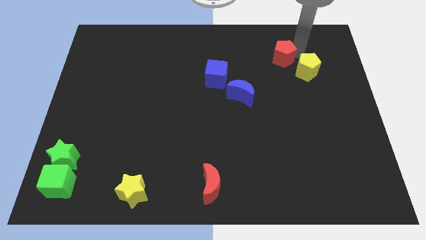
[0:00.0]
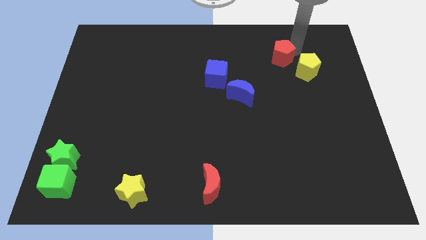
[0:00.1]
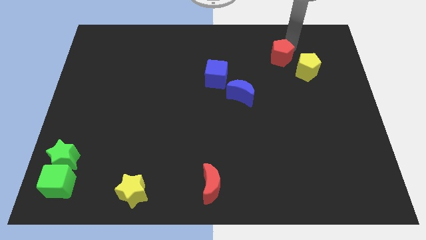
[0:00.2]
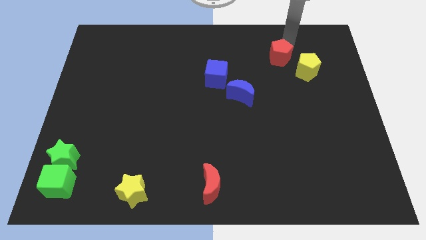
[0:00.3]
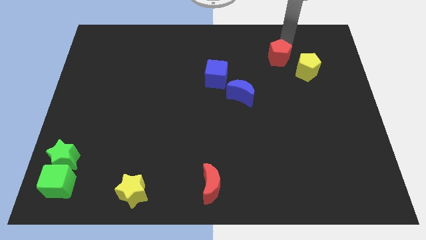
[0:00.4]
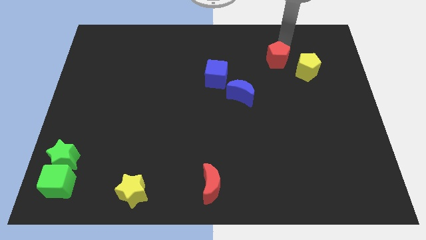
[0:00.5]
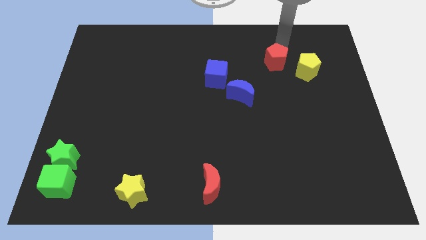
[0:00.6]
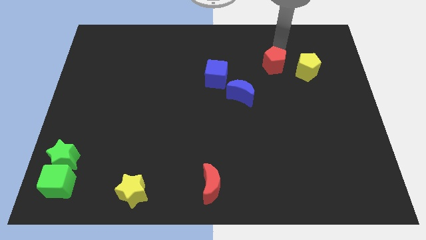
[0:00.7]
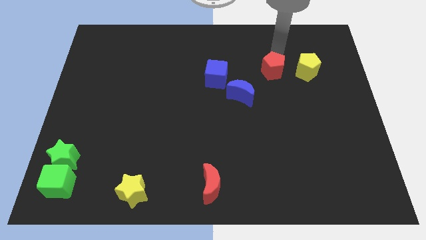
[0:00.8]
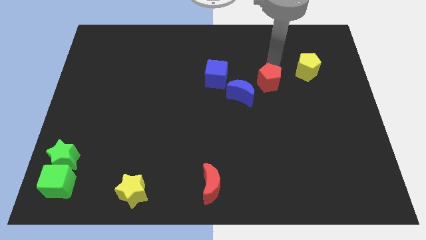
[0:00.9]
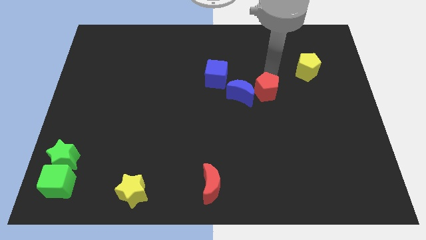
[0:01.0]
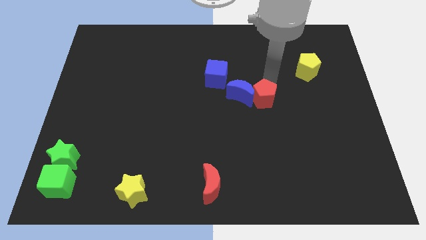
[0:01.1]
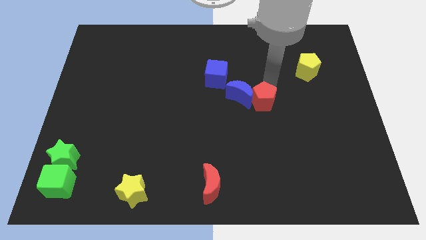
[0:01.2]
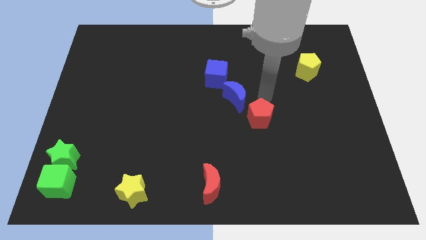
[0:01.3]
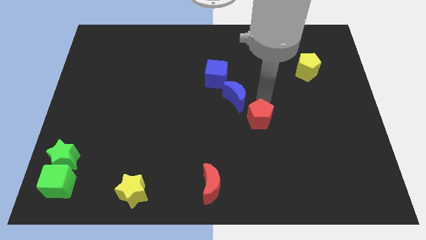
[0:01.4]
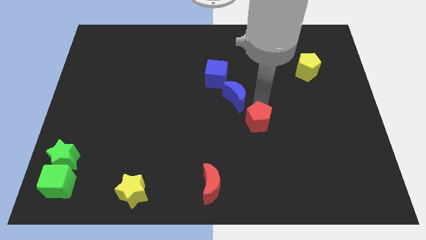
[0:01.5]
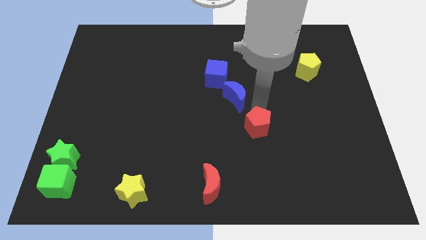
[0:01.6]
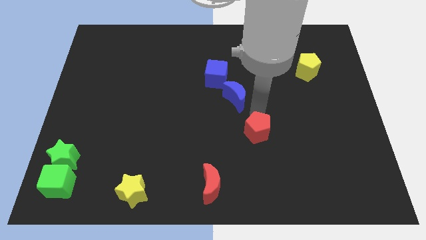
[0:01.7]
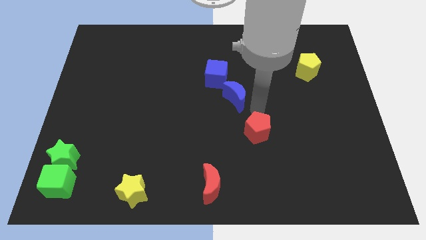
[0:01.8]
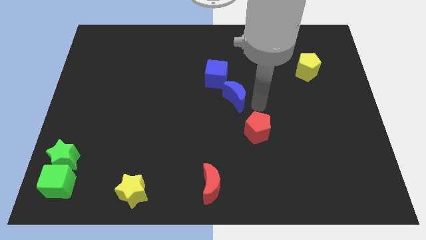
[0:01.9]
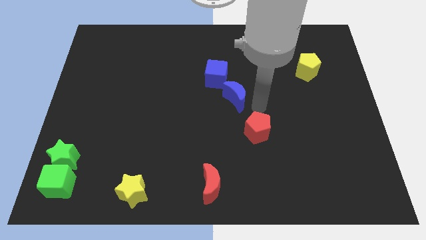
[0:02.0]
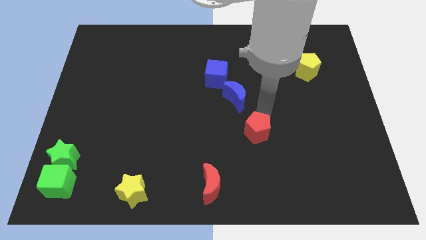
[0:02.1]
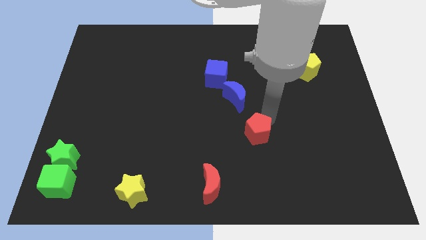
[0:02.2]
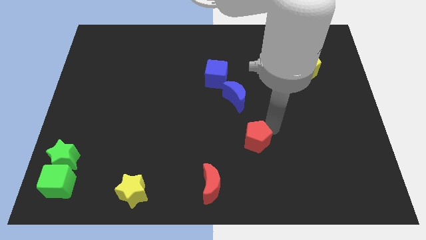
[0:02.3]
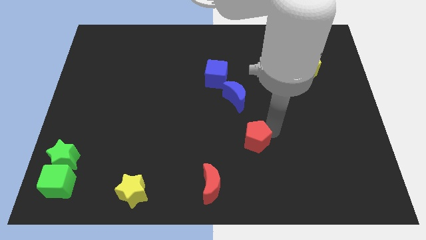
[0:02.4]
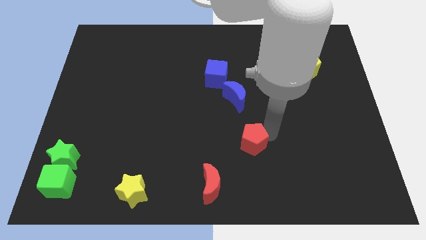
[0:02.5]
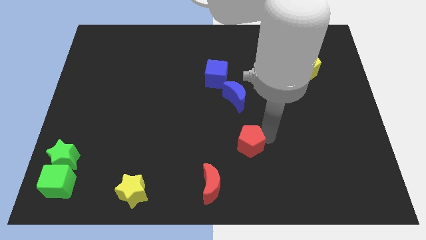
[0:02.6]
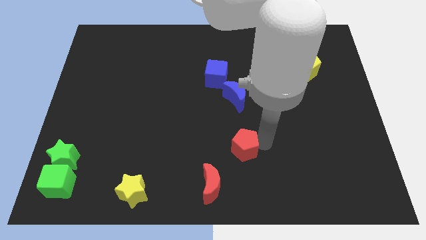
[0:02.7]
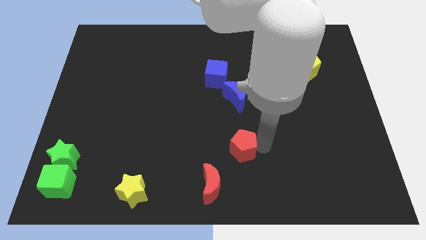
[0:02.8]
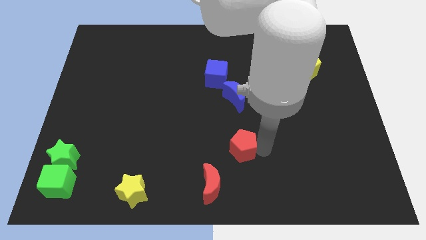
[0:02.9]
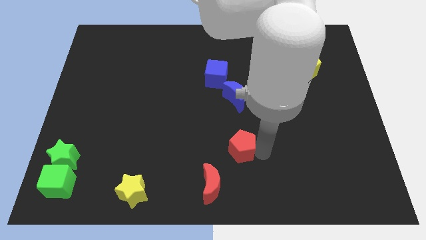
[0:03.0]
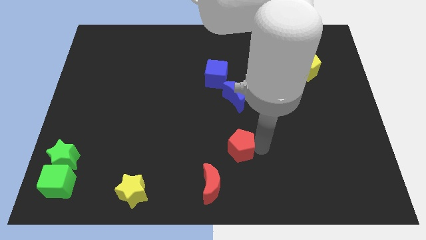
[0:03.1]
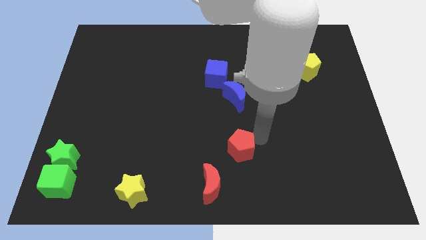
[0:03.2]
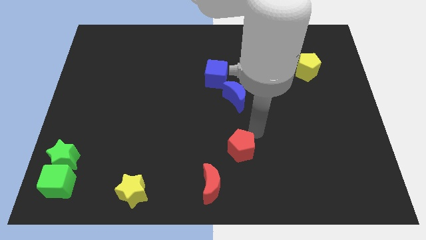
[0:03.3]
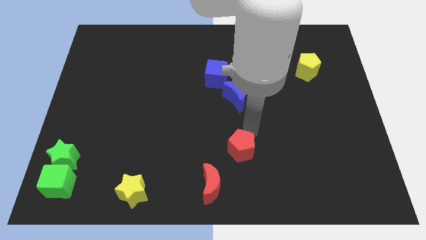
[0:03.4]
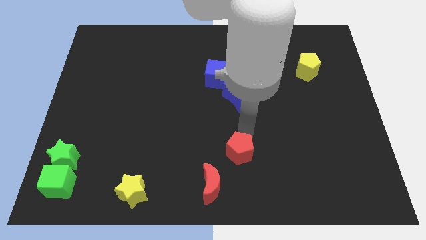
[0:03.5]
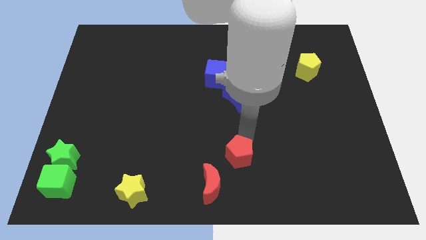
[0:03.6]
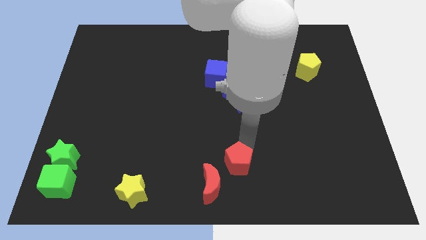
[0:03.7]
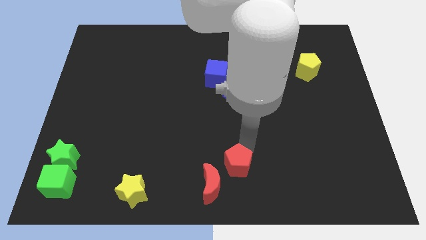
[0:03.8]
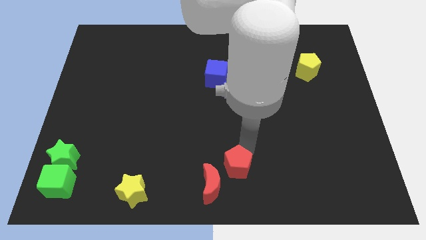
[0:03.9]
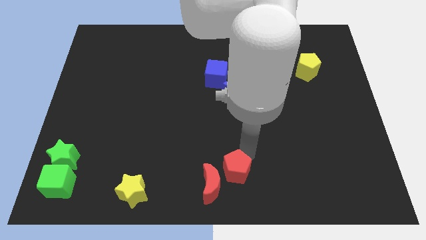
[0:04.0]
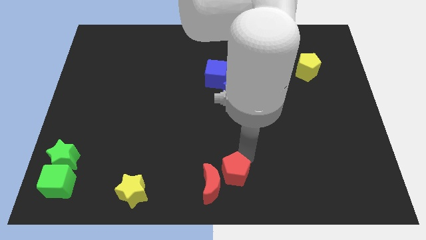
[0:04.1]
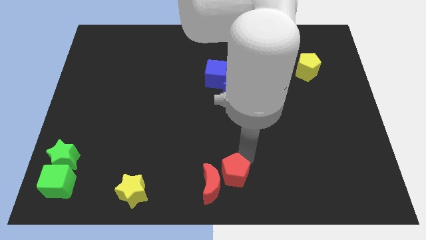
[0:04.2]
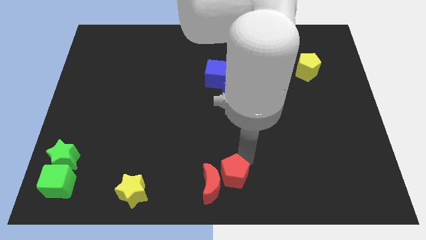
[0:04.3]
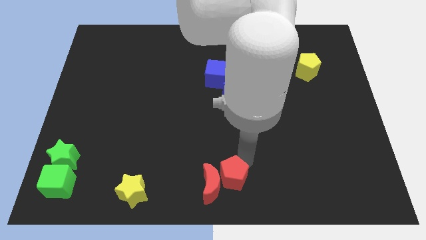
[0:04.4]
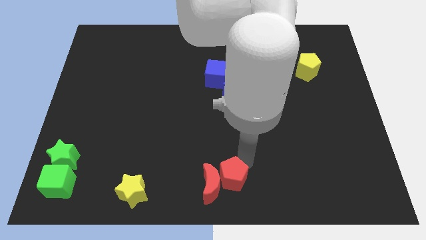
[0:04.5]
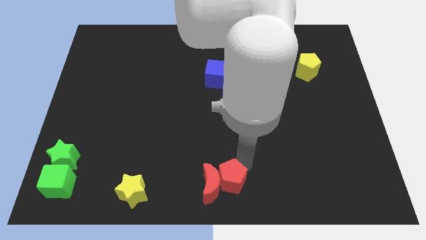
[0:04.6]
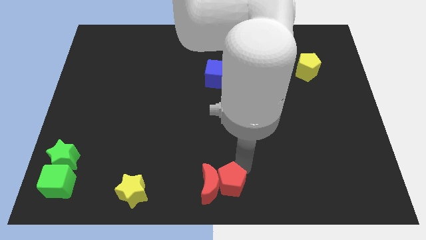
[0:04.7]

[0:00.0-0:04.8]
push the red pentagon into red crescent

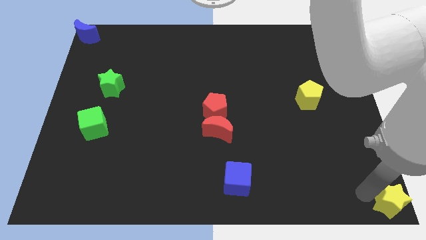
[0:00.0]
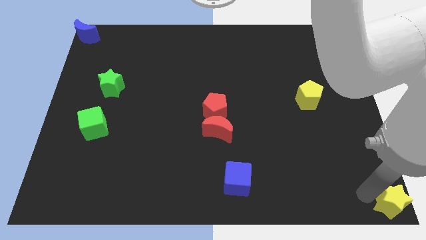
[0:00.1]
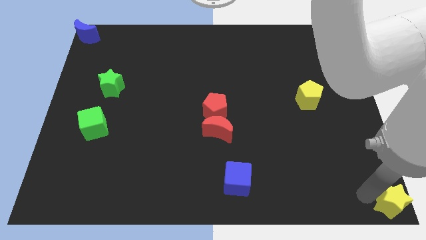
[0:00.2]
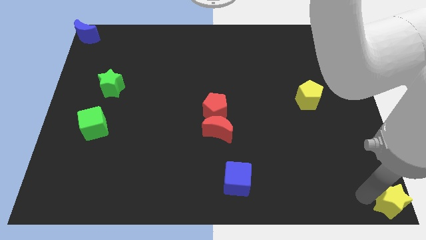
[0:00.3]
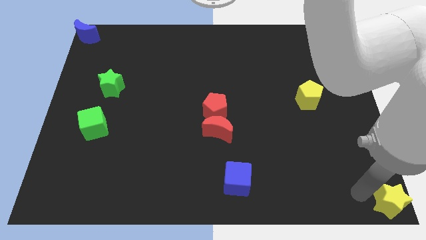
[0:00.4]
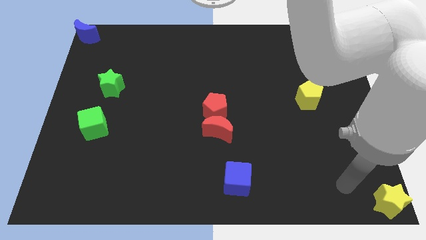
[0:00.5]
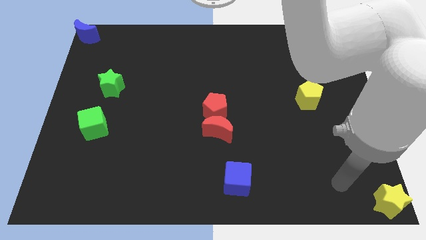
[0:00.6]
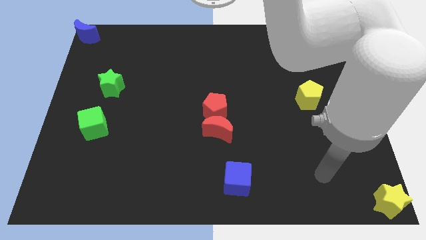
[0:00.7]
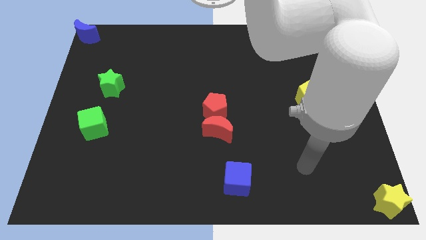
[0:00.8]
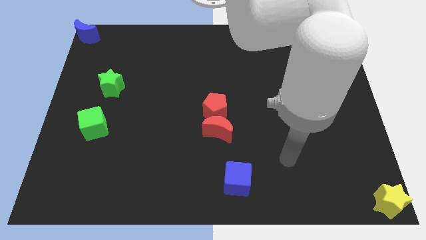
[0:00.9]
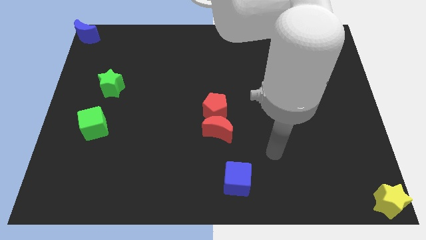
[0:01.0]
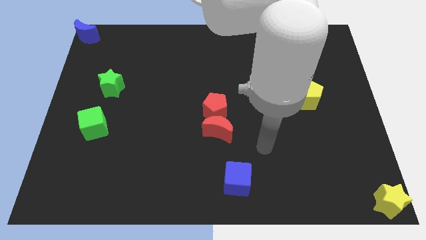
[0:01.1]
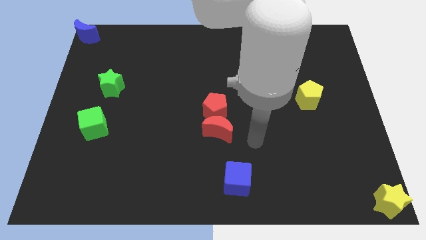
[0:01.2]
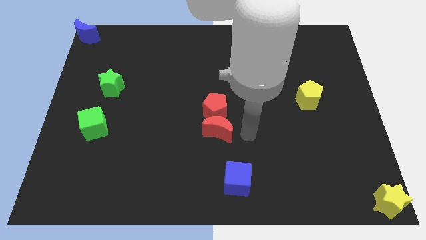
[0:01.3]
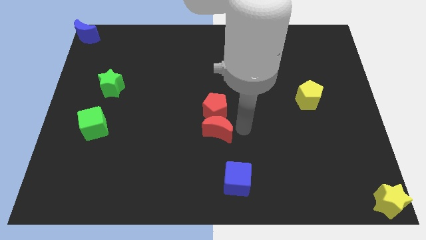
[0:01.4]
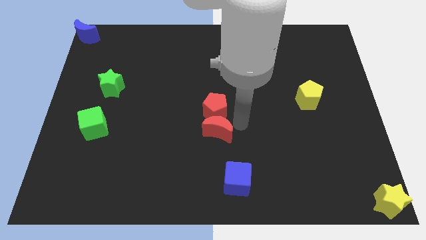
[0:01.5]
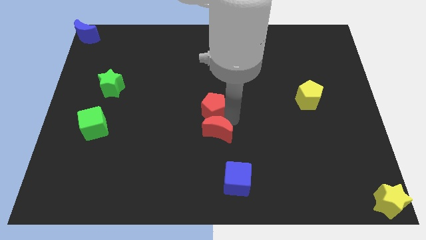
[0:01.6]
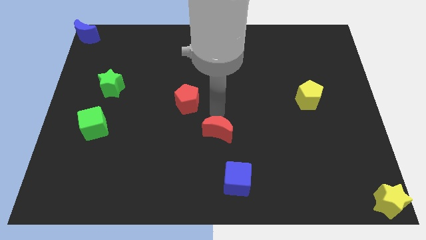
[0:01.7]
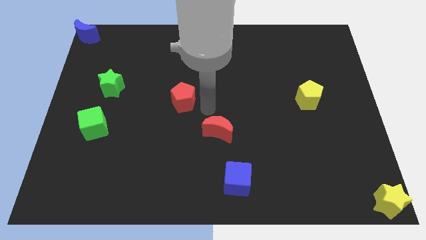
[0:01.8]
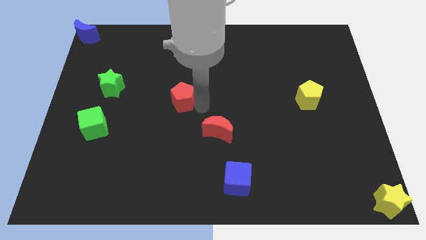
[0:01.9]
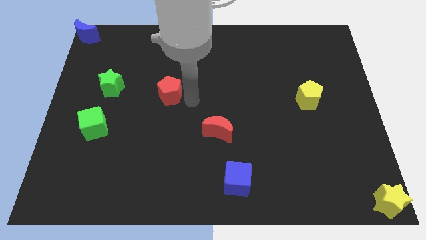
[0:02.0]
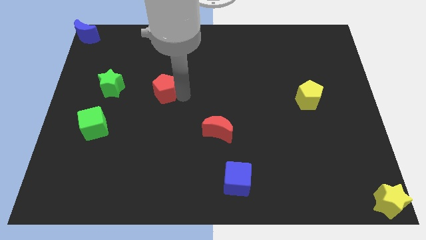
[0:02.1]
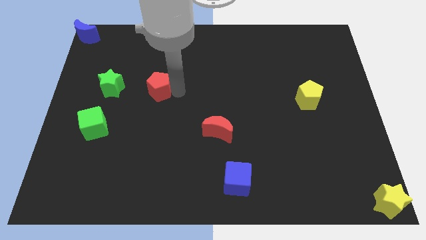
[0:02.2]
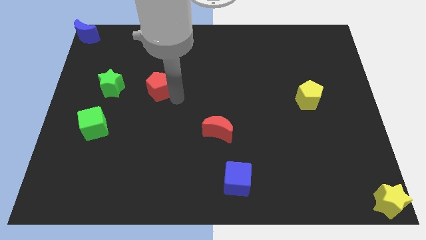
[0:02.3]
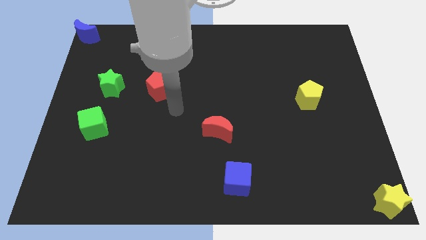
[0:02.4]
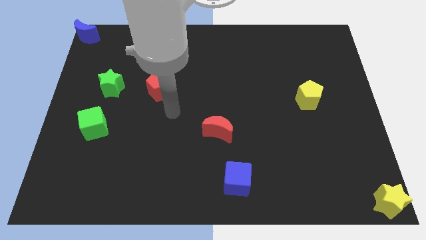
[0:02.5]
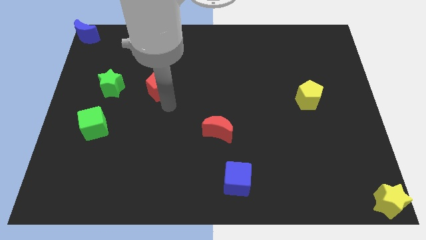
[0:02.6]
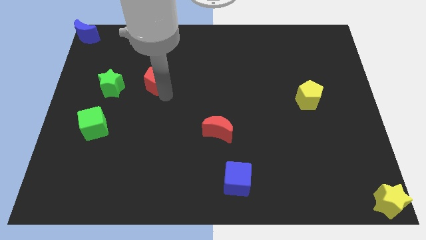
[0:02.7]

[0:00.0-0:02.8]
place the red pentagon right to the green star

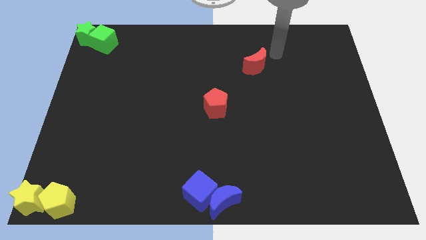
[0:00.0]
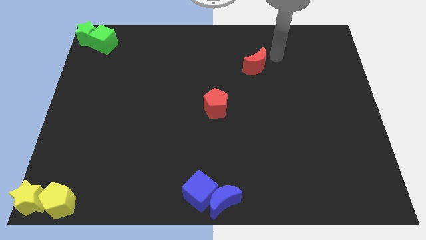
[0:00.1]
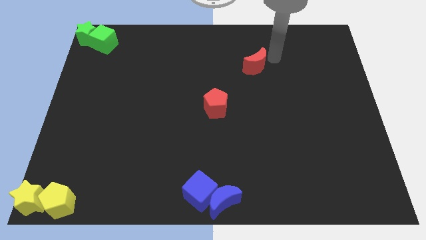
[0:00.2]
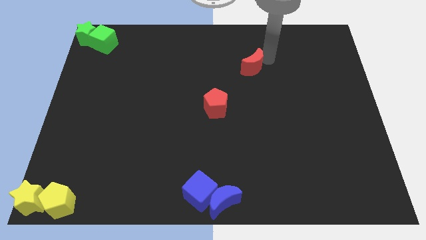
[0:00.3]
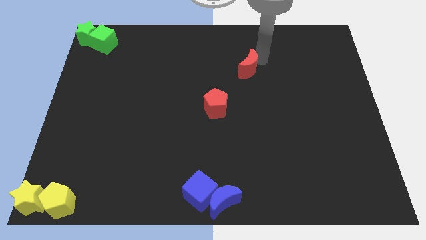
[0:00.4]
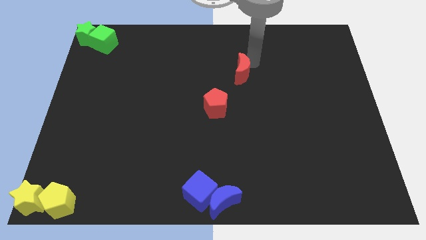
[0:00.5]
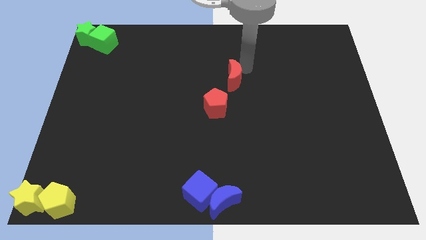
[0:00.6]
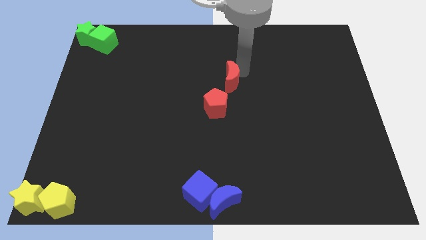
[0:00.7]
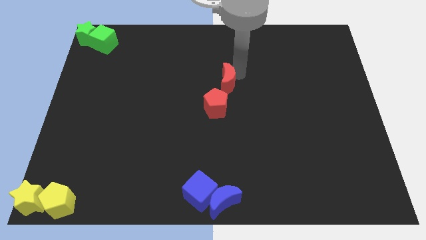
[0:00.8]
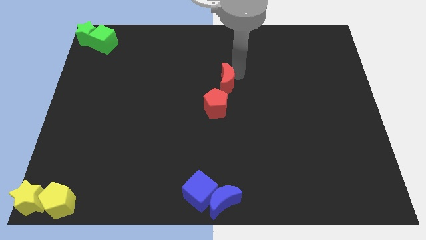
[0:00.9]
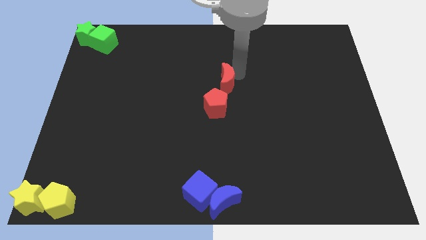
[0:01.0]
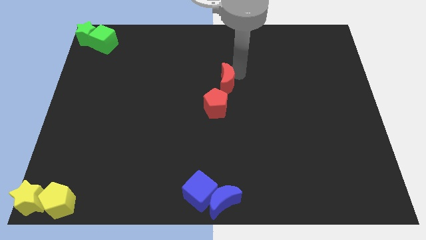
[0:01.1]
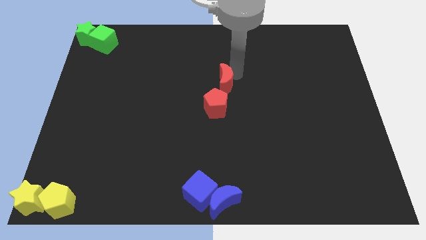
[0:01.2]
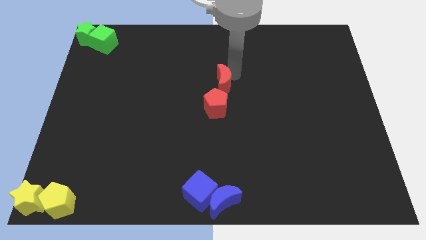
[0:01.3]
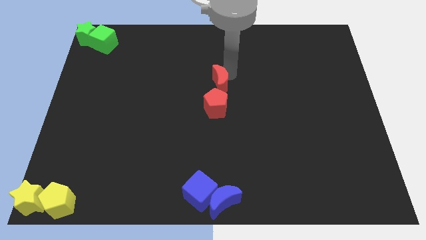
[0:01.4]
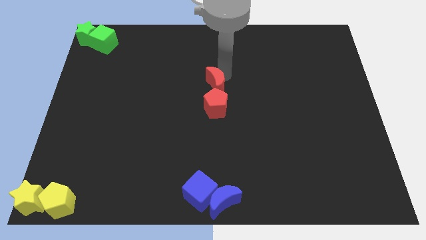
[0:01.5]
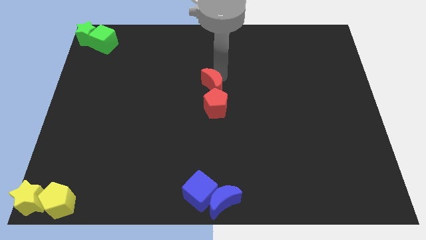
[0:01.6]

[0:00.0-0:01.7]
push red crescent above red pentagon
